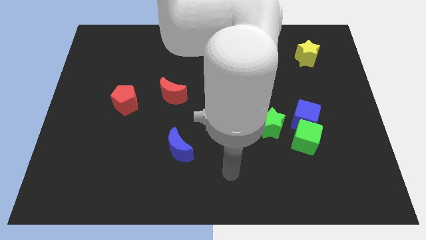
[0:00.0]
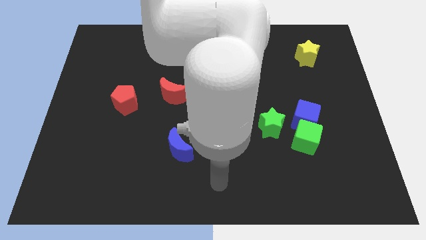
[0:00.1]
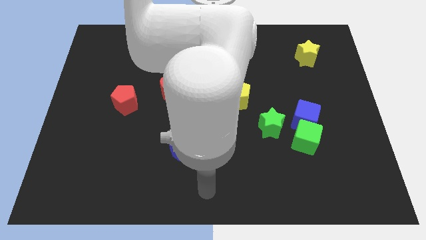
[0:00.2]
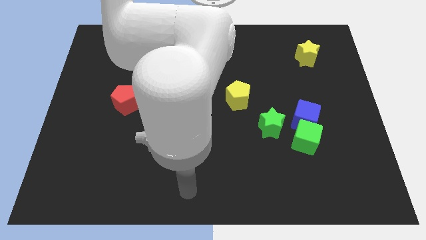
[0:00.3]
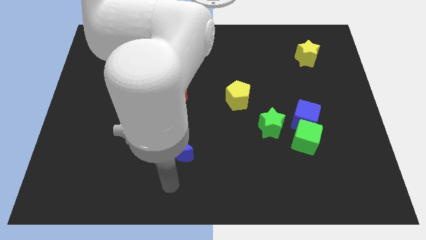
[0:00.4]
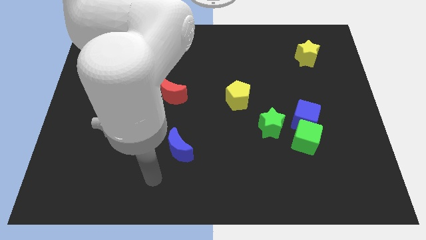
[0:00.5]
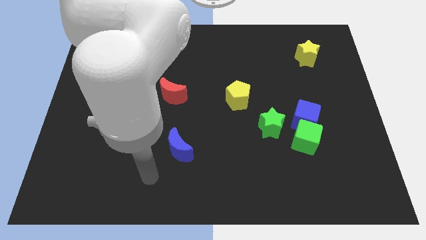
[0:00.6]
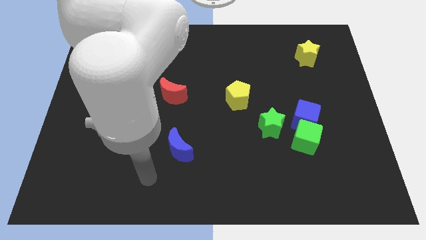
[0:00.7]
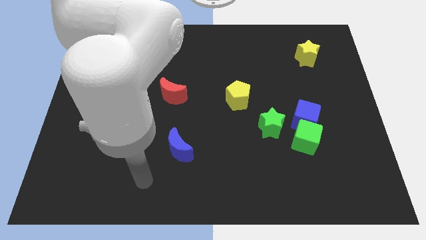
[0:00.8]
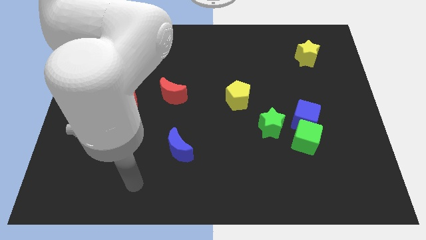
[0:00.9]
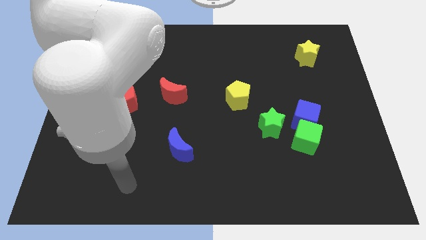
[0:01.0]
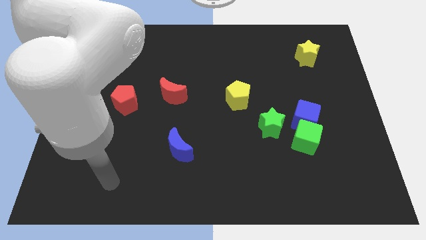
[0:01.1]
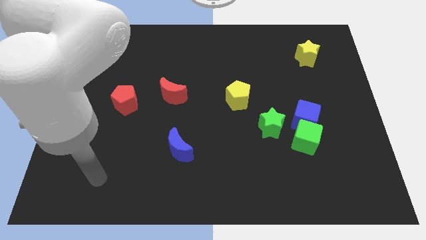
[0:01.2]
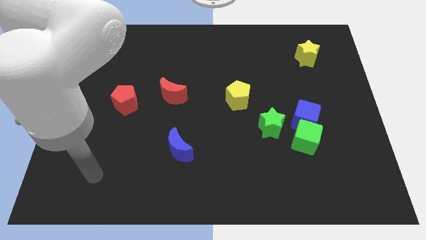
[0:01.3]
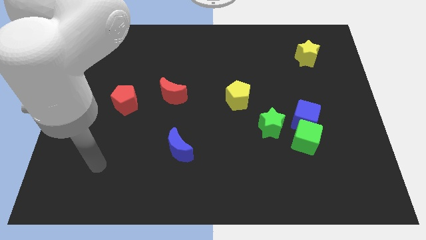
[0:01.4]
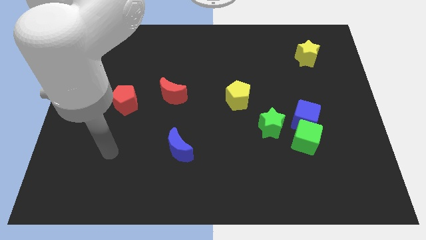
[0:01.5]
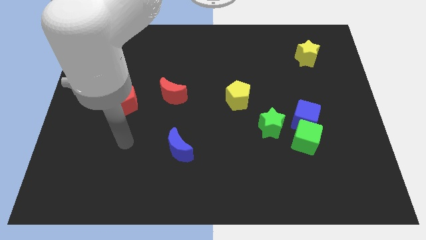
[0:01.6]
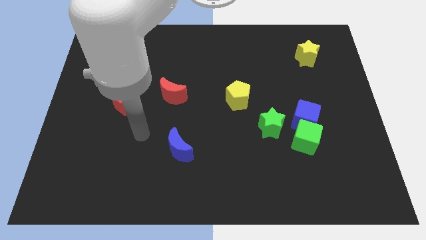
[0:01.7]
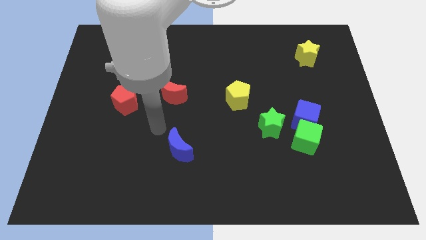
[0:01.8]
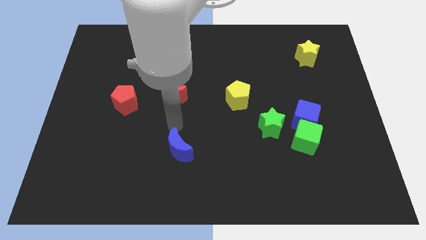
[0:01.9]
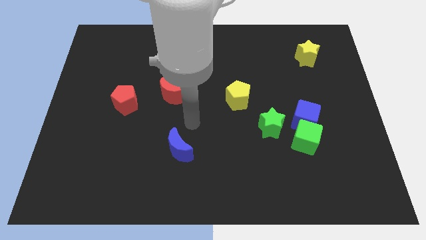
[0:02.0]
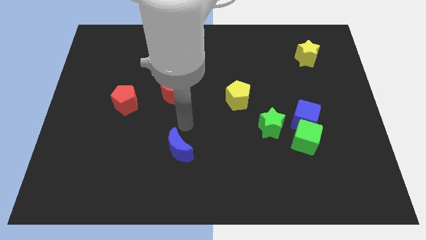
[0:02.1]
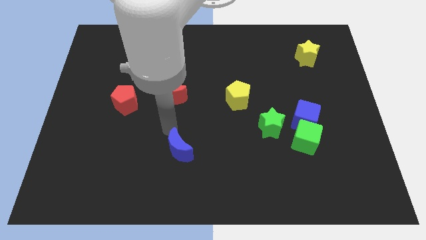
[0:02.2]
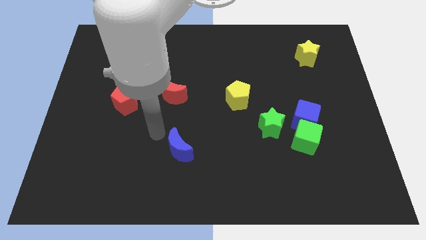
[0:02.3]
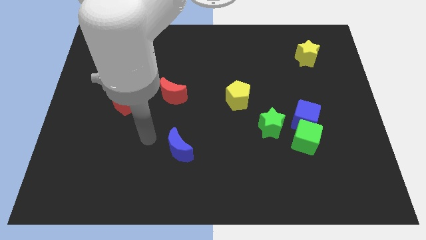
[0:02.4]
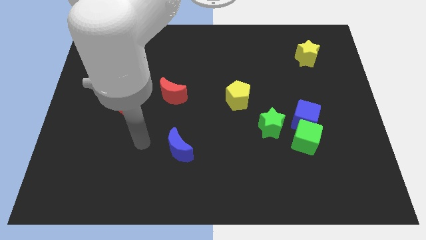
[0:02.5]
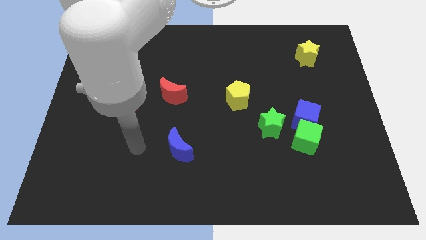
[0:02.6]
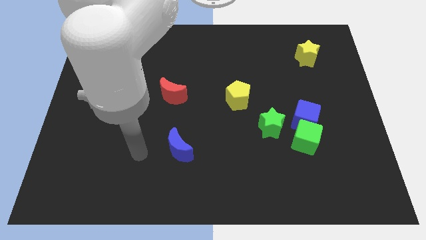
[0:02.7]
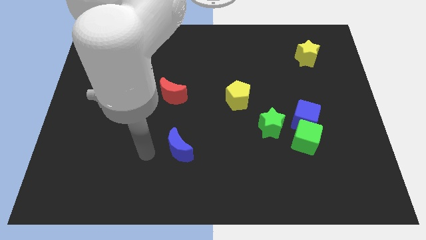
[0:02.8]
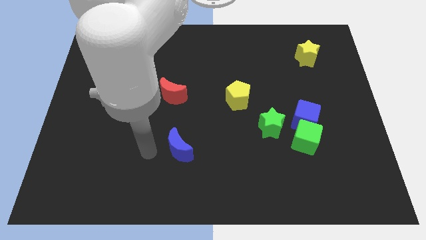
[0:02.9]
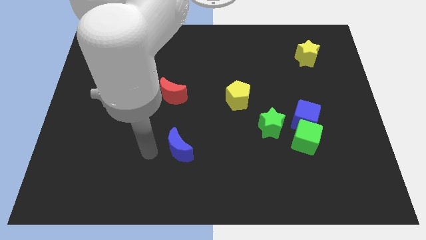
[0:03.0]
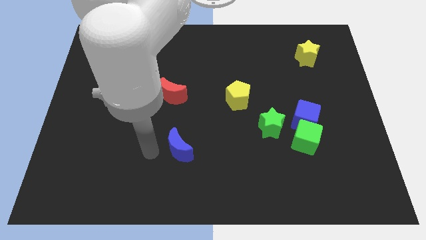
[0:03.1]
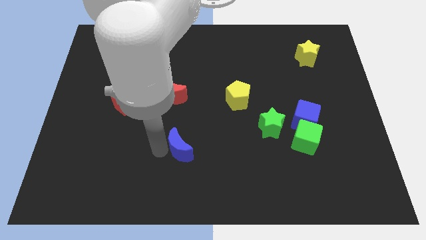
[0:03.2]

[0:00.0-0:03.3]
point your arm at the left side of the blue moon

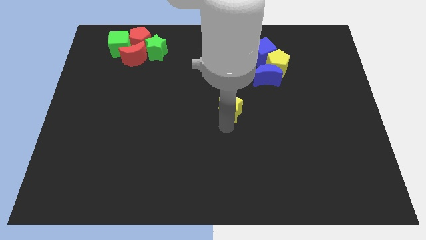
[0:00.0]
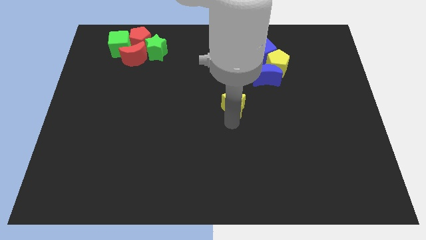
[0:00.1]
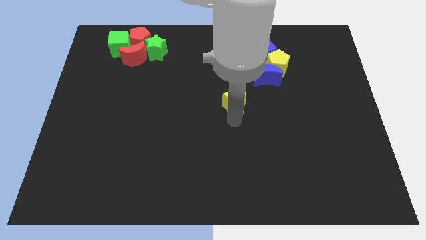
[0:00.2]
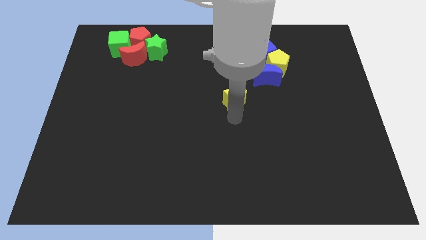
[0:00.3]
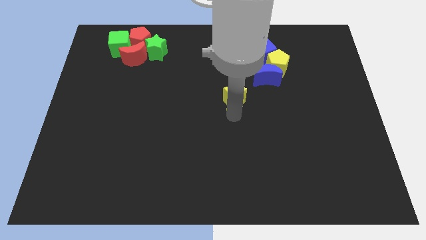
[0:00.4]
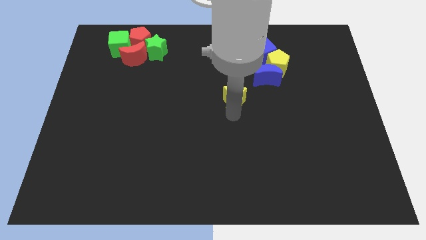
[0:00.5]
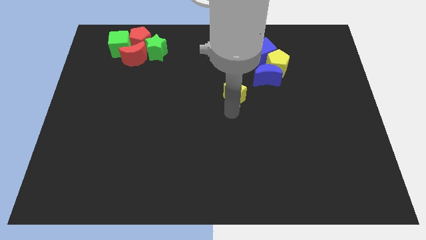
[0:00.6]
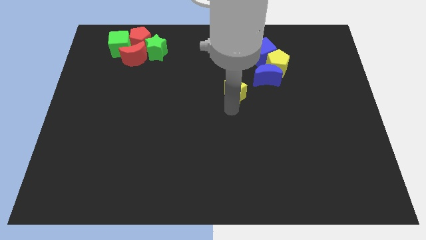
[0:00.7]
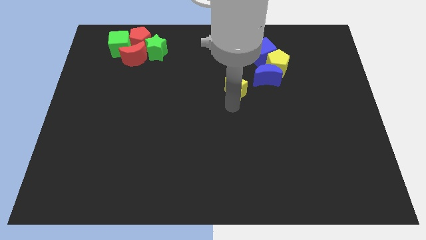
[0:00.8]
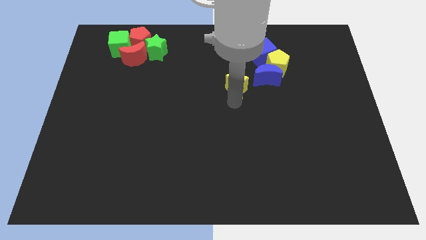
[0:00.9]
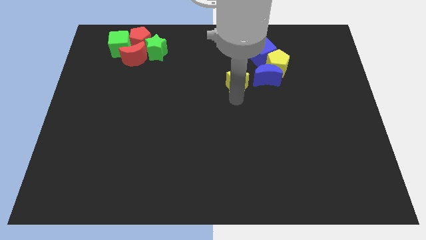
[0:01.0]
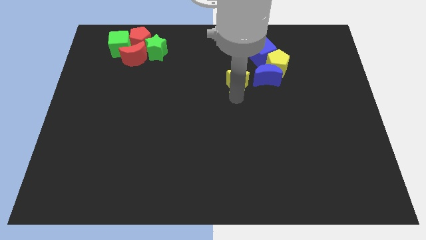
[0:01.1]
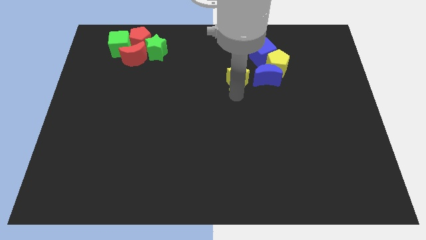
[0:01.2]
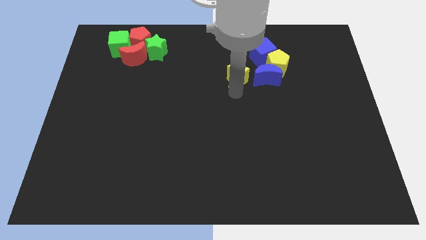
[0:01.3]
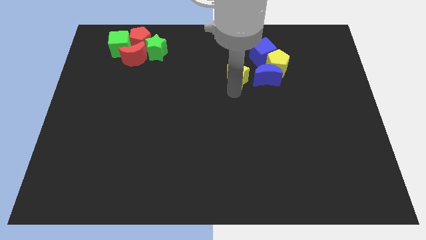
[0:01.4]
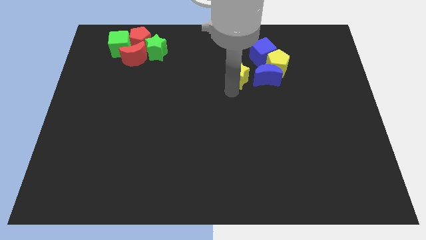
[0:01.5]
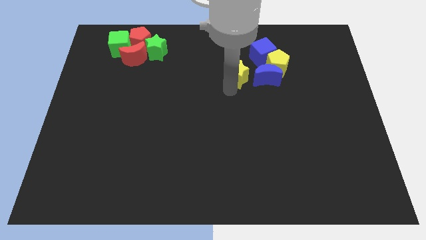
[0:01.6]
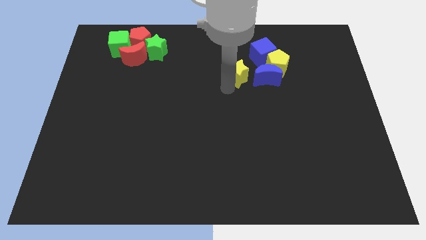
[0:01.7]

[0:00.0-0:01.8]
place the yellow star to the left of the blue crescent

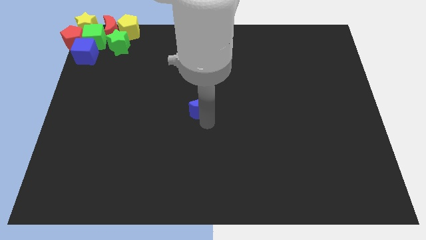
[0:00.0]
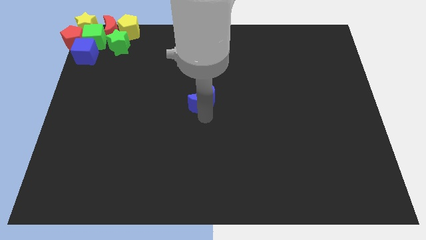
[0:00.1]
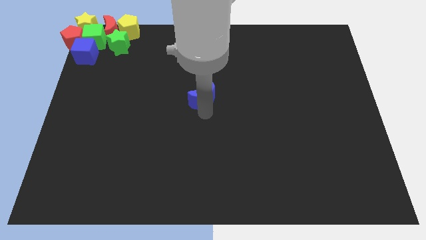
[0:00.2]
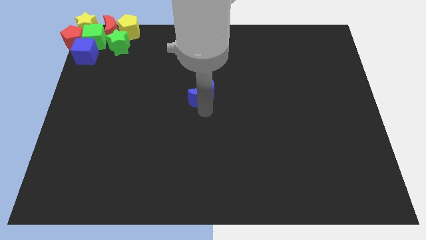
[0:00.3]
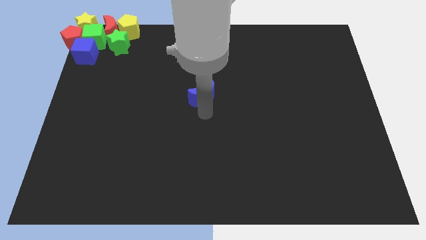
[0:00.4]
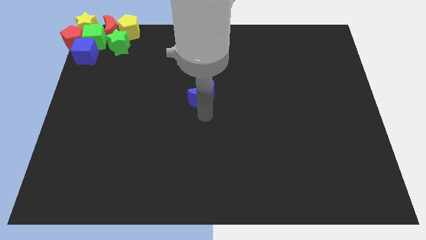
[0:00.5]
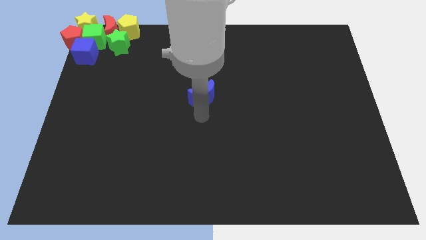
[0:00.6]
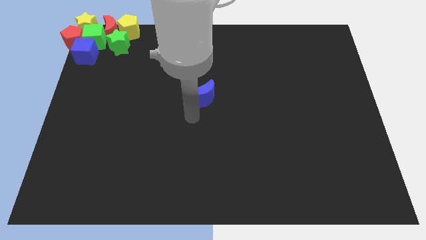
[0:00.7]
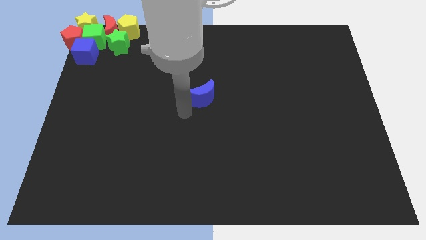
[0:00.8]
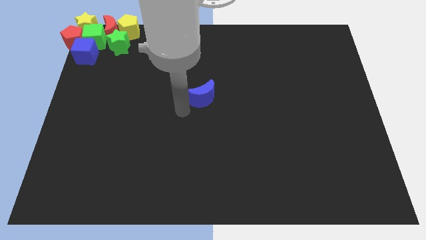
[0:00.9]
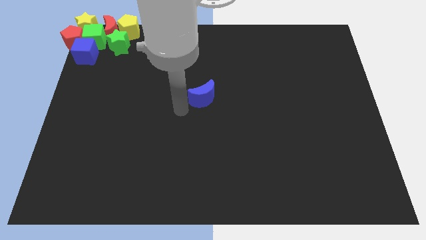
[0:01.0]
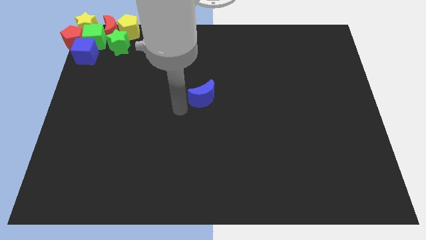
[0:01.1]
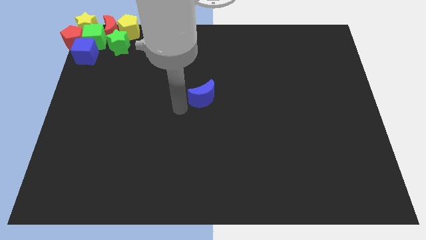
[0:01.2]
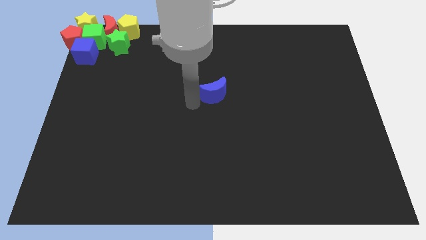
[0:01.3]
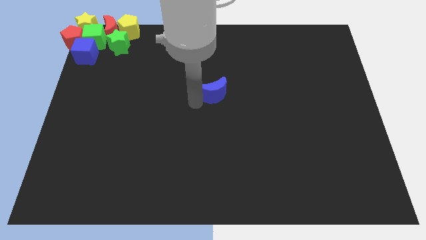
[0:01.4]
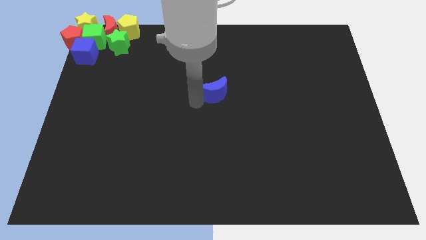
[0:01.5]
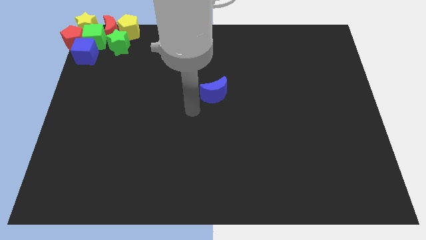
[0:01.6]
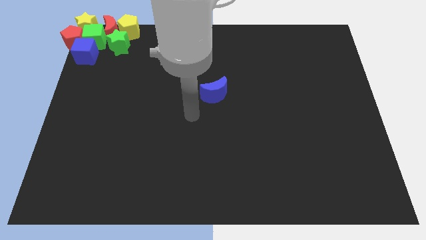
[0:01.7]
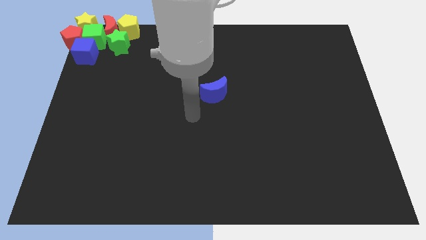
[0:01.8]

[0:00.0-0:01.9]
move the blue moon slightly up

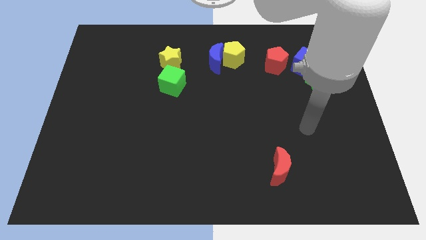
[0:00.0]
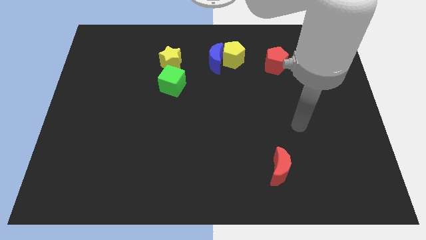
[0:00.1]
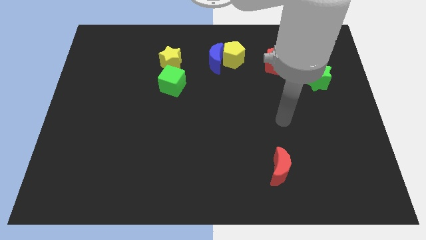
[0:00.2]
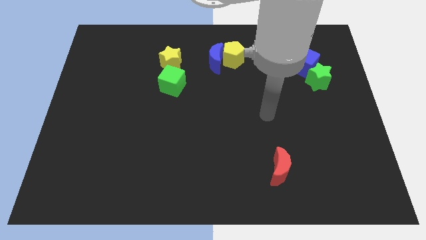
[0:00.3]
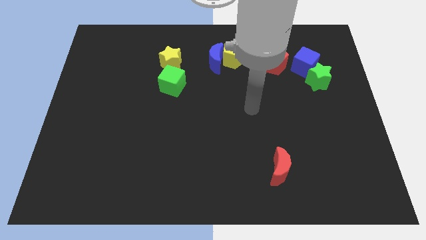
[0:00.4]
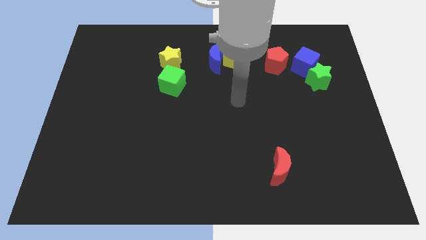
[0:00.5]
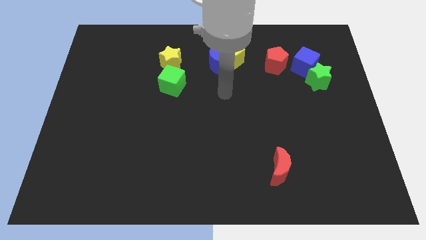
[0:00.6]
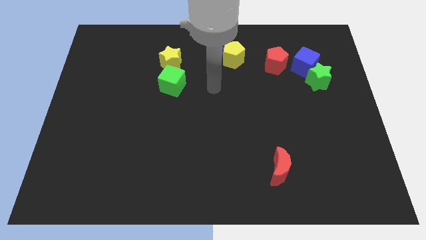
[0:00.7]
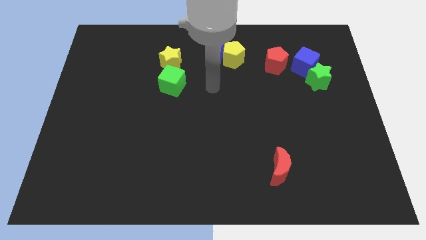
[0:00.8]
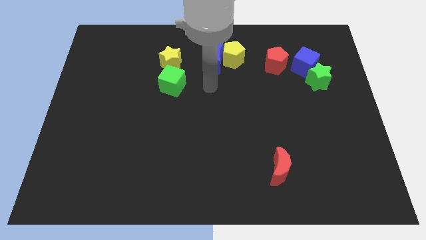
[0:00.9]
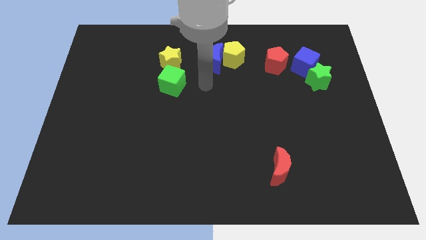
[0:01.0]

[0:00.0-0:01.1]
point the arm to the right of the green cube

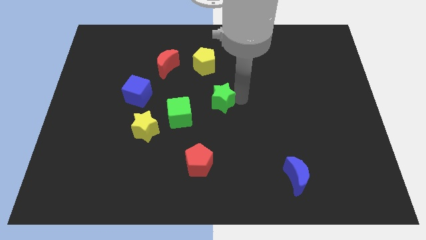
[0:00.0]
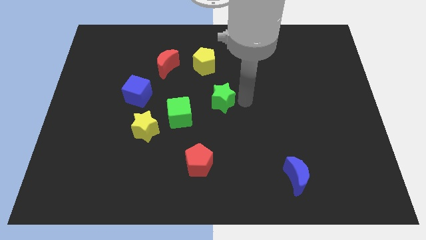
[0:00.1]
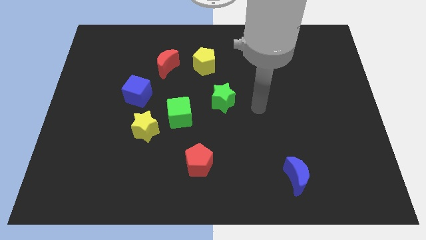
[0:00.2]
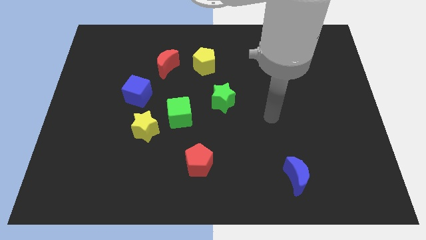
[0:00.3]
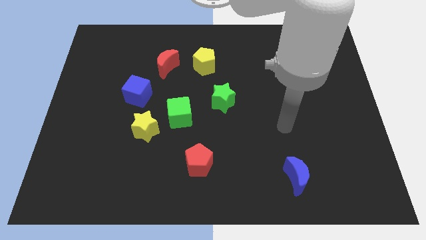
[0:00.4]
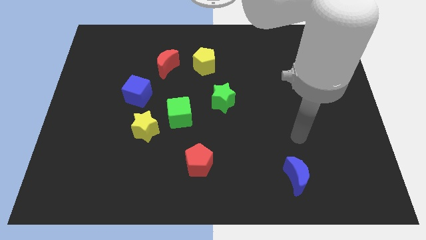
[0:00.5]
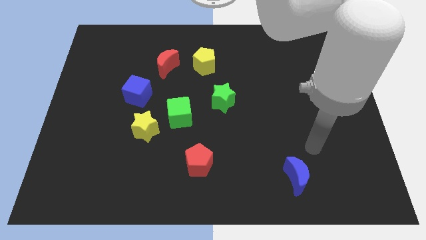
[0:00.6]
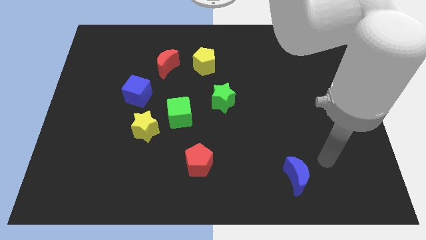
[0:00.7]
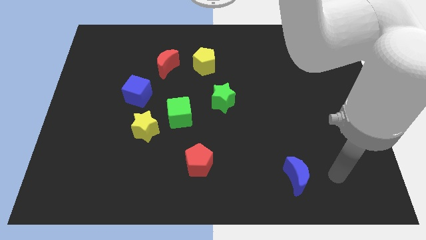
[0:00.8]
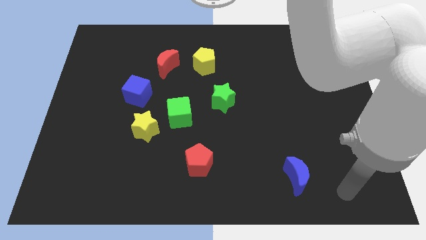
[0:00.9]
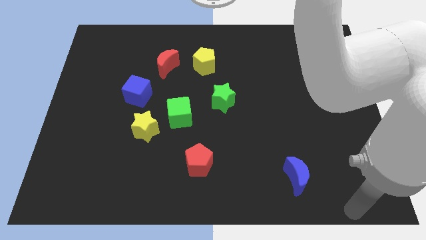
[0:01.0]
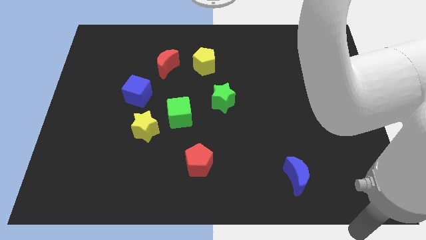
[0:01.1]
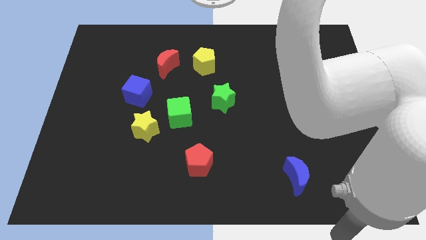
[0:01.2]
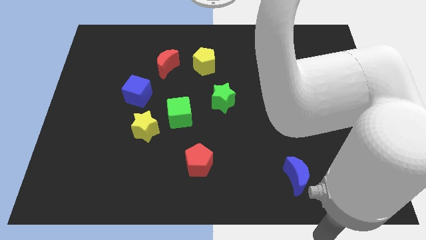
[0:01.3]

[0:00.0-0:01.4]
go away from green star
